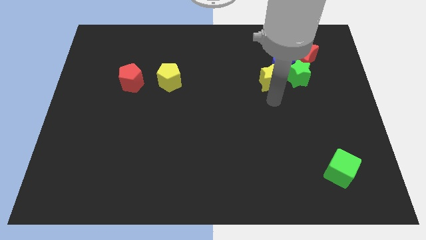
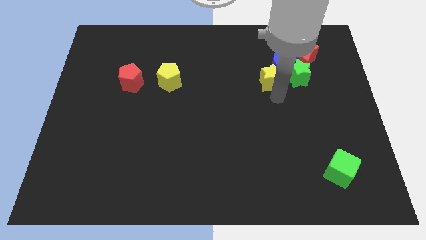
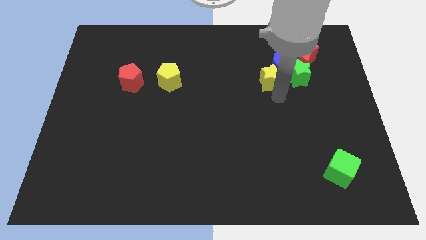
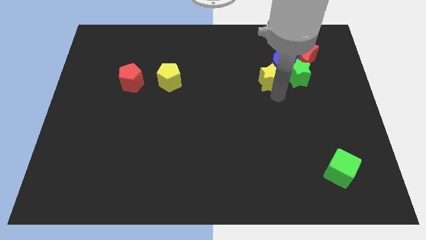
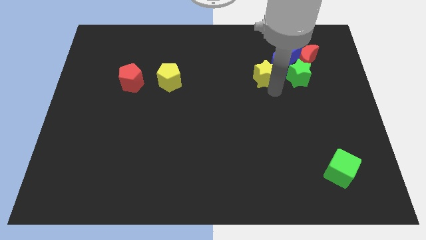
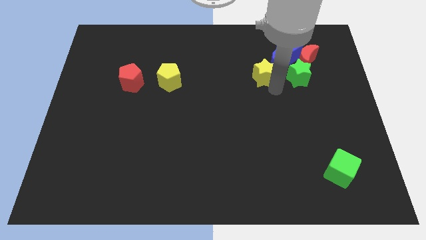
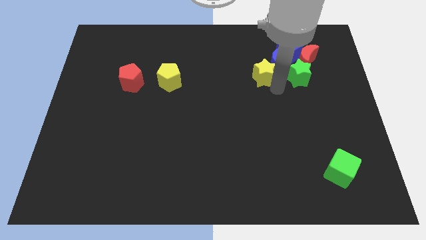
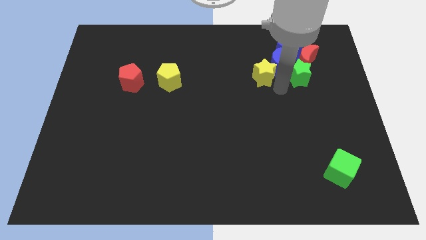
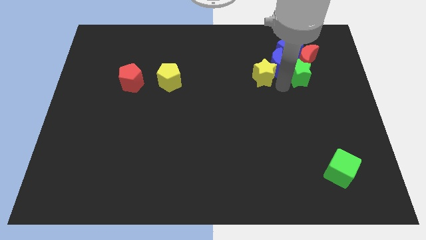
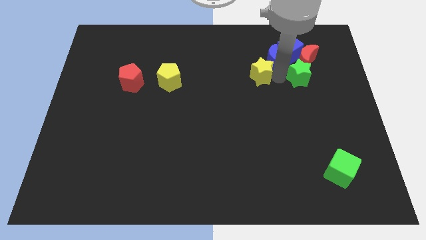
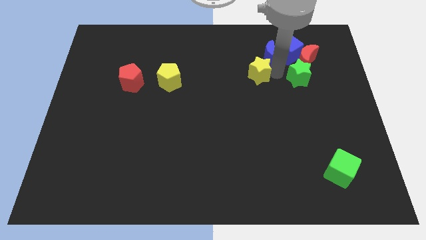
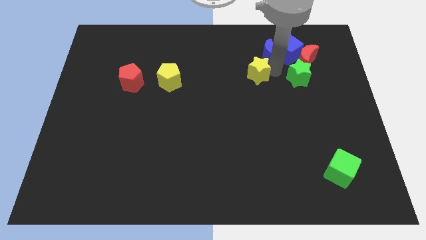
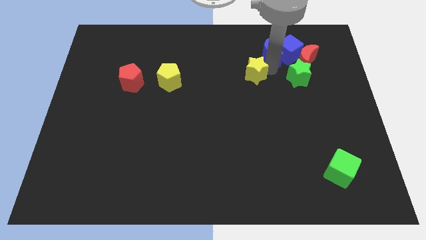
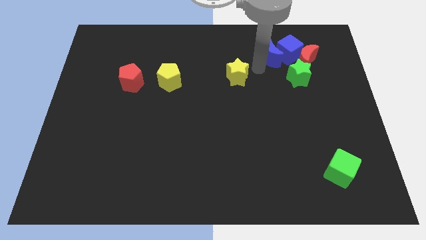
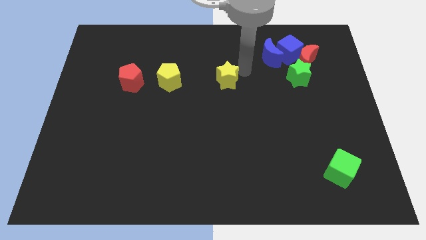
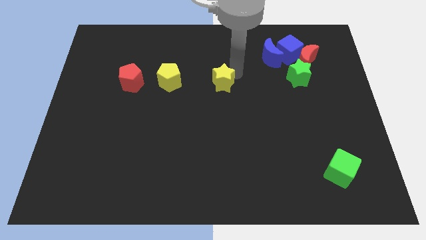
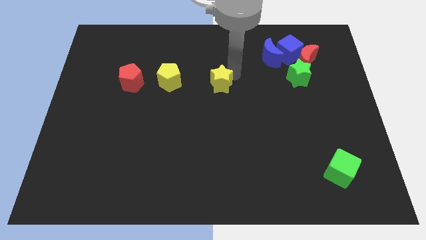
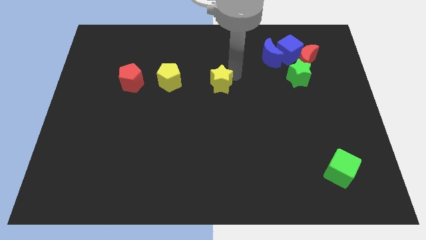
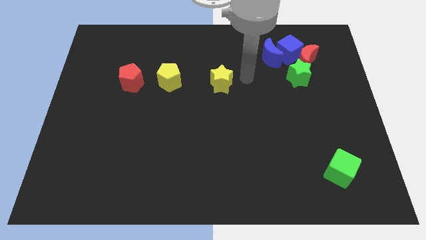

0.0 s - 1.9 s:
separate the yellow star from the blue moon

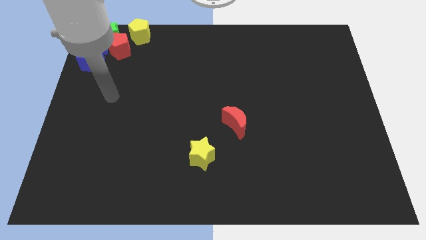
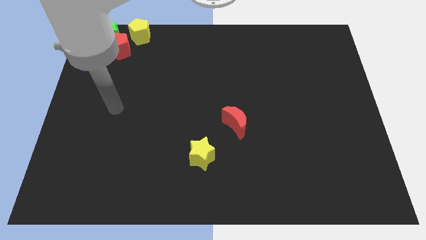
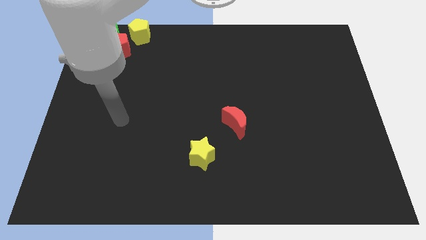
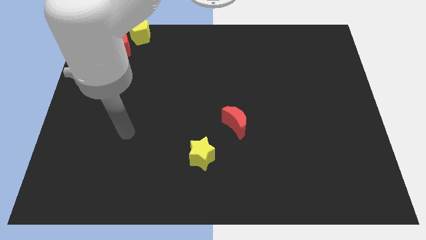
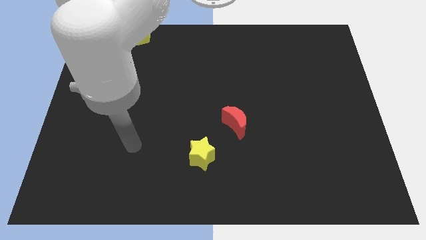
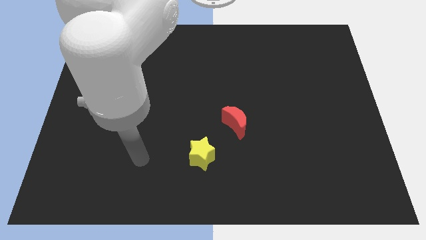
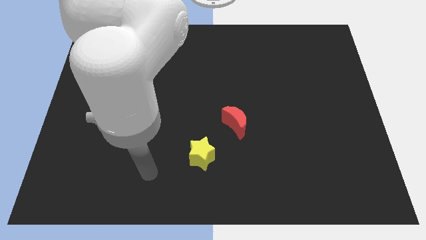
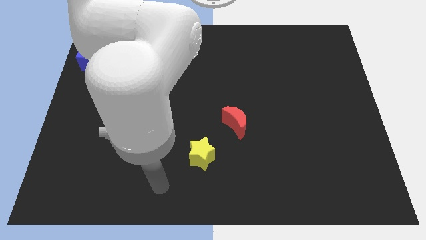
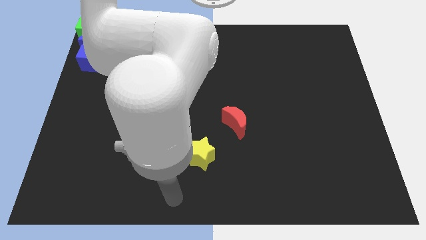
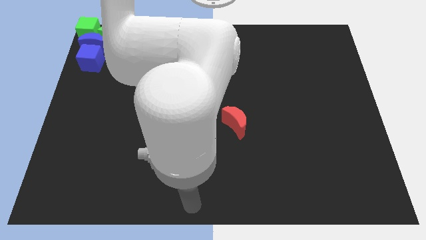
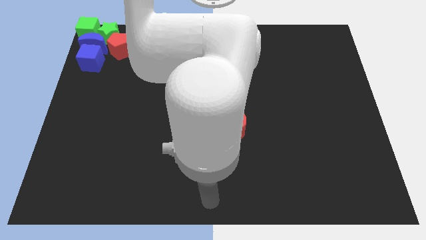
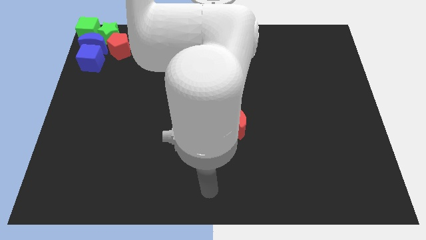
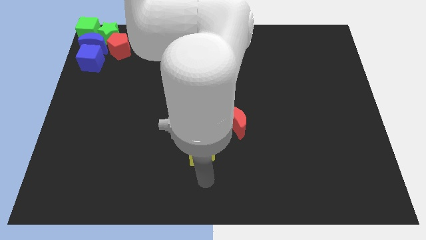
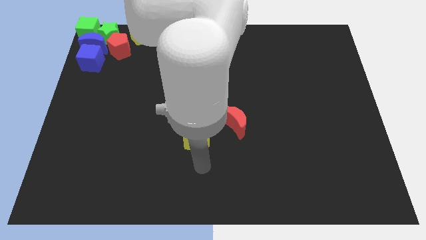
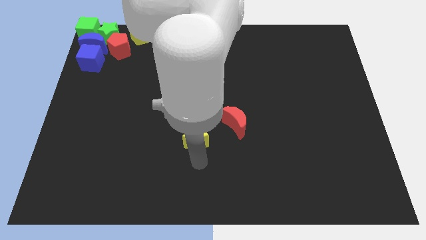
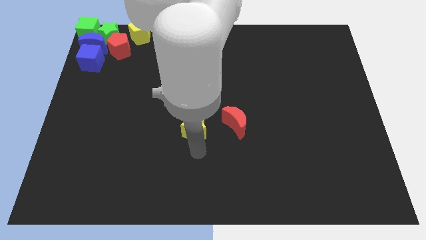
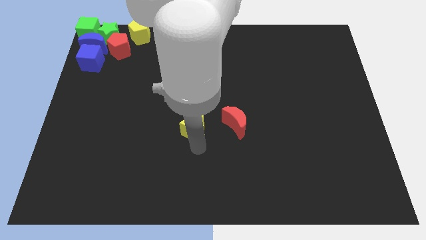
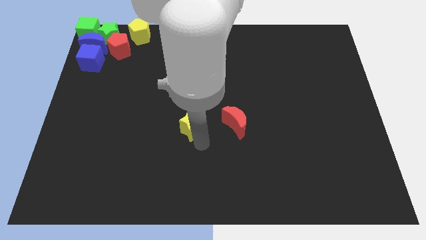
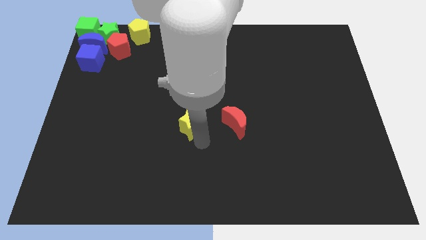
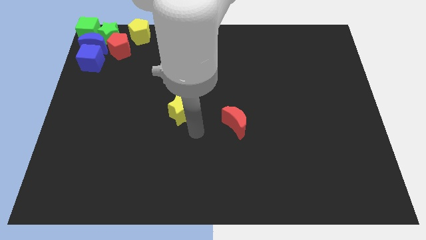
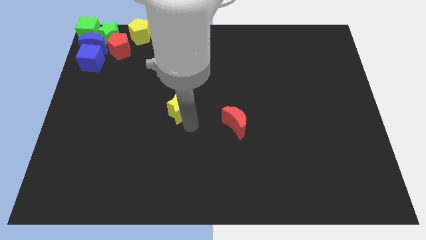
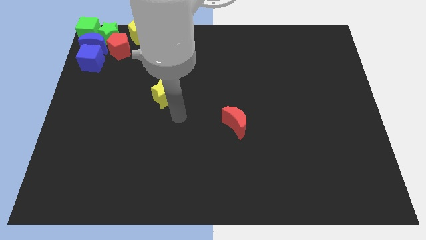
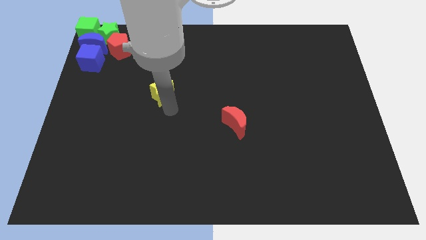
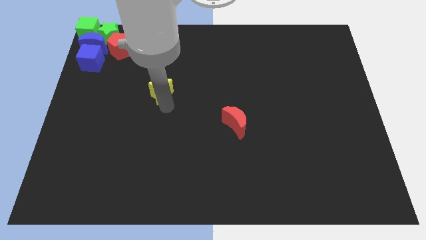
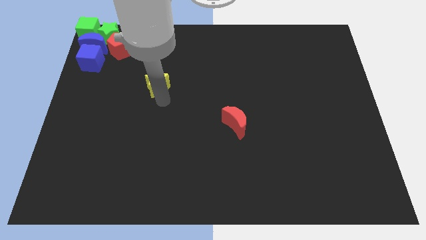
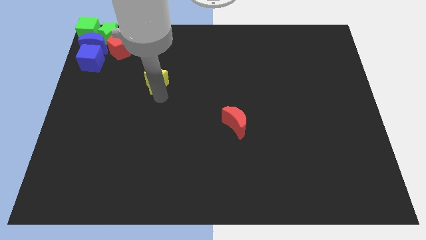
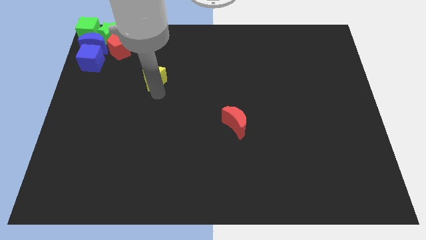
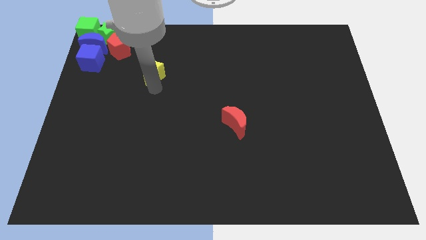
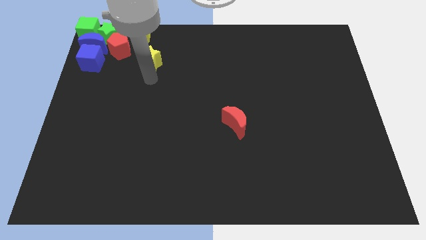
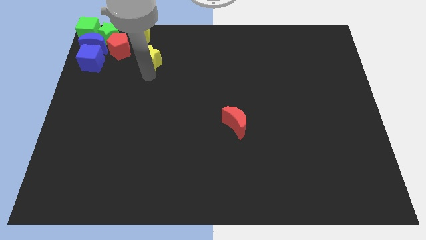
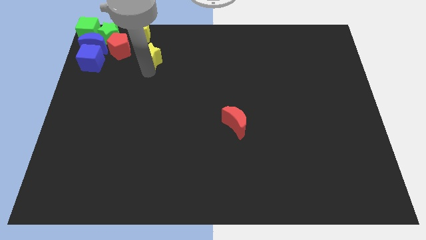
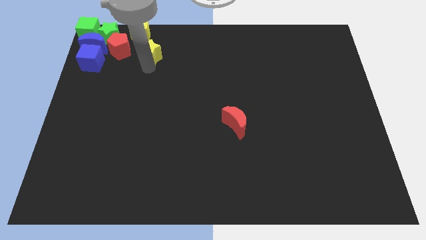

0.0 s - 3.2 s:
move the yellow star towards the yellow pentagon

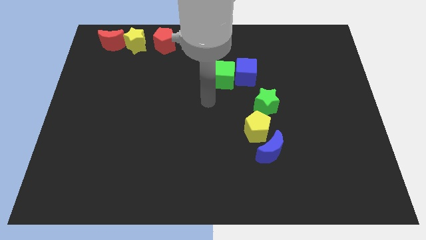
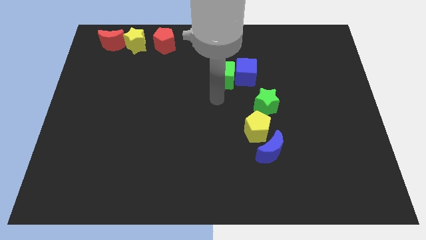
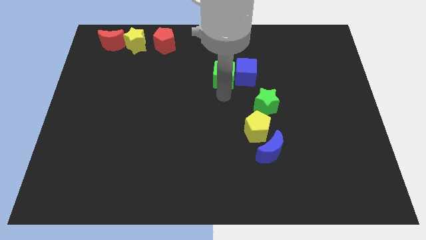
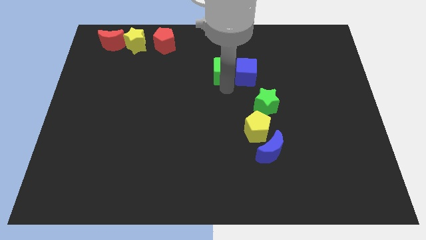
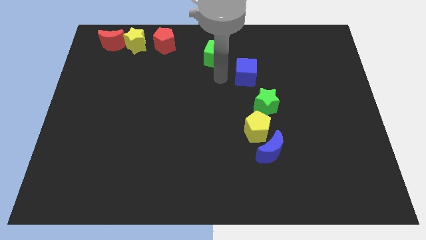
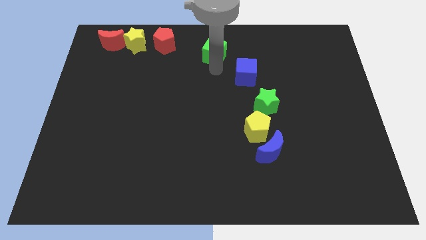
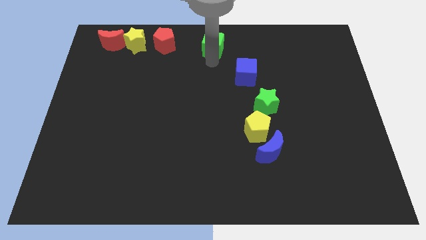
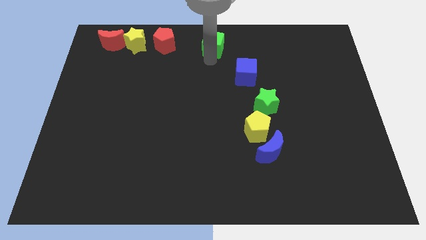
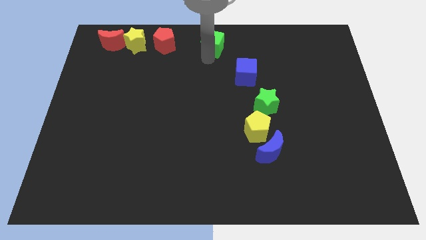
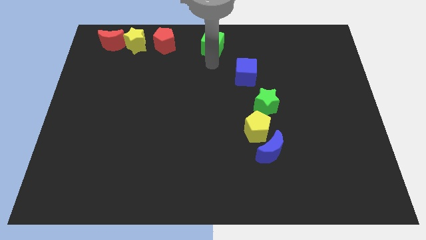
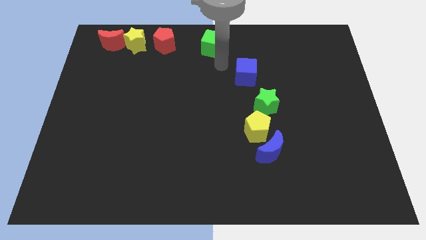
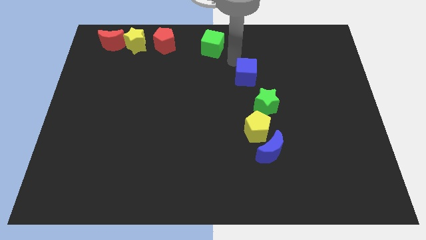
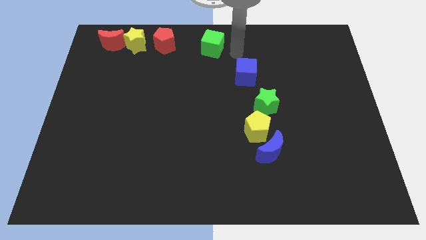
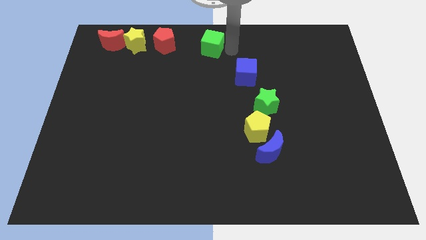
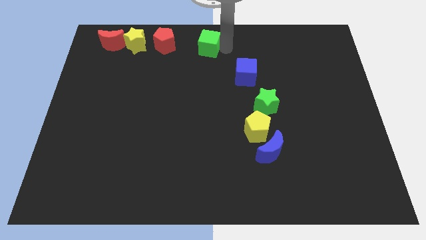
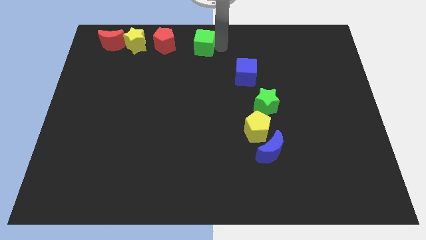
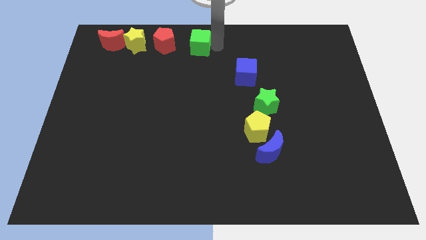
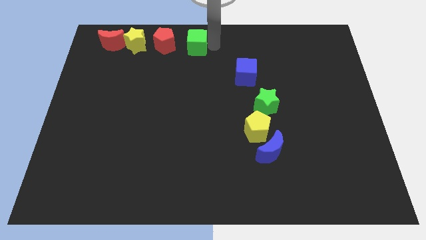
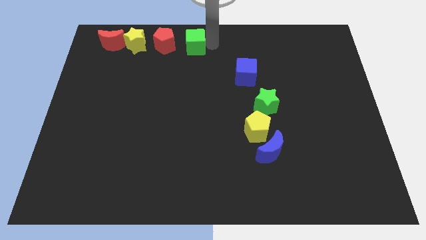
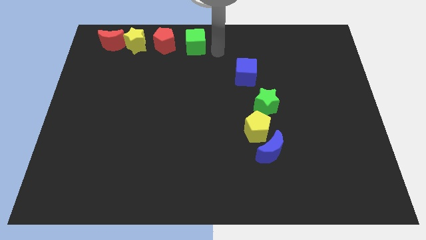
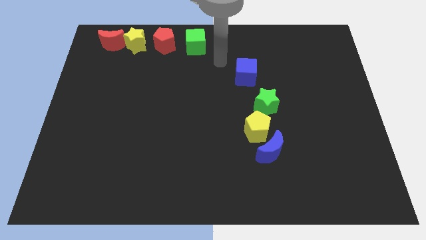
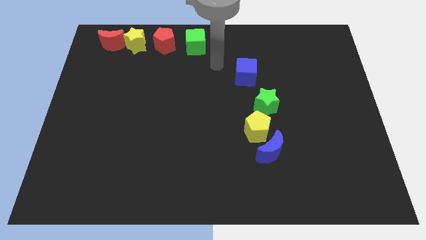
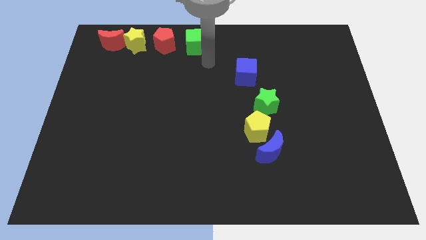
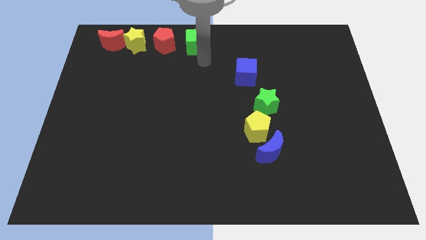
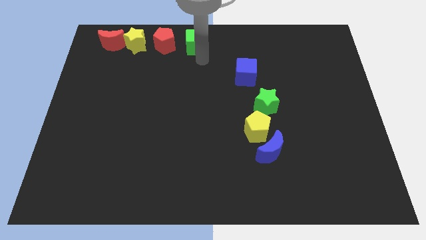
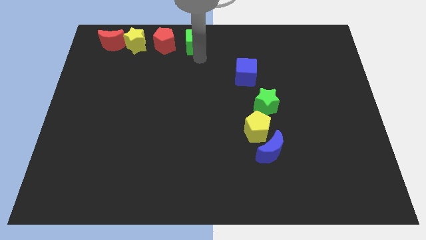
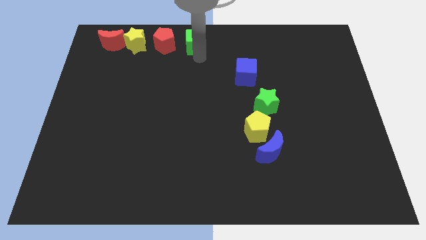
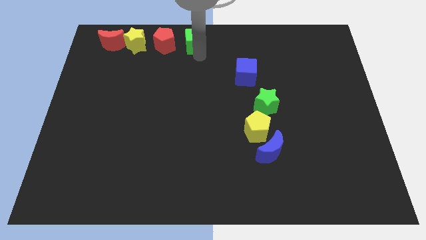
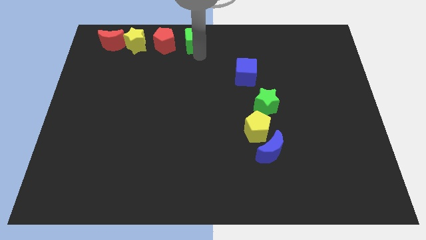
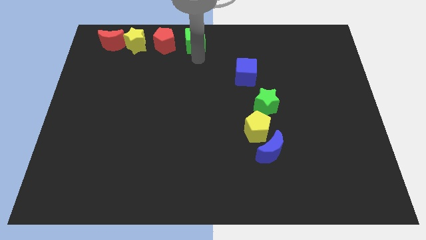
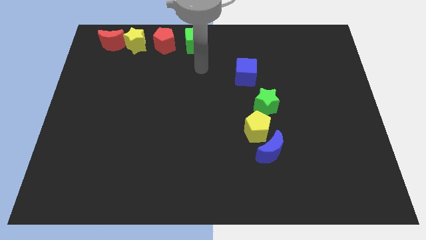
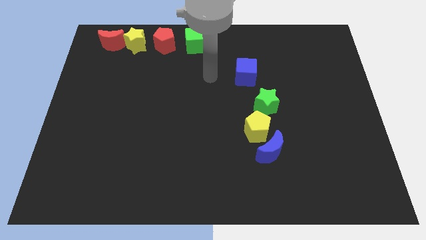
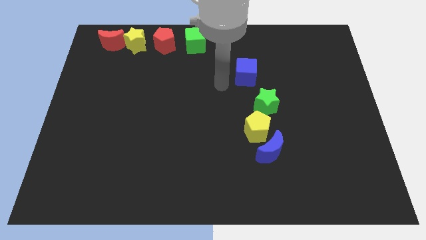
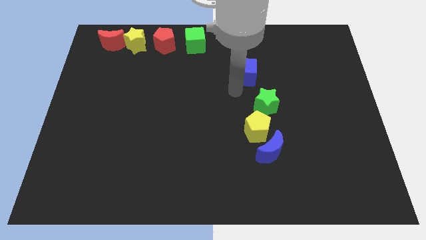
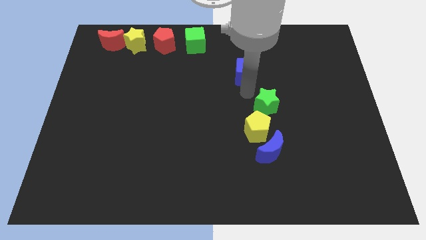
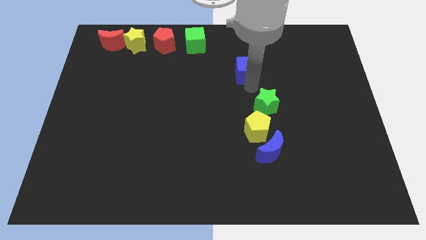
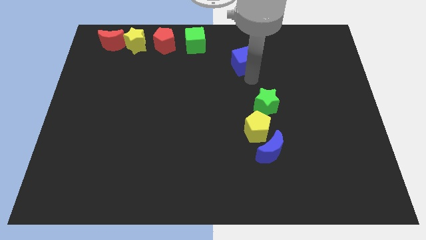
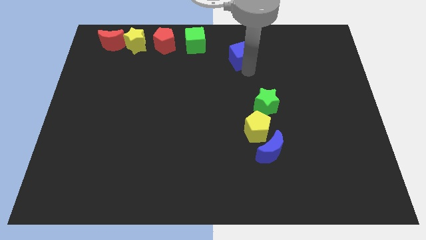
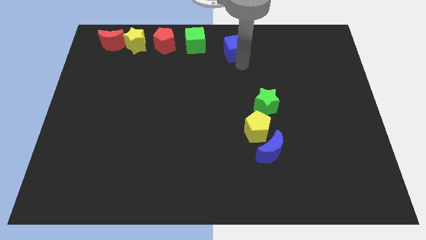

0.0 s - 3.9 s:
move green cube to the right of red pentagon
